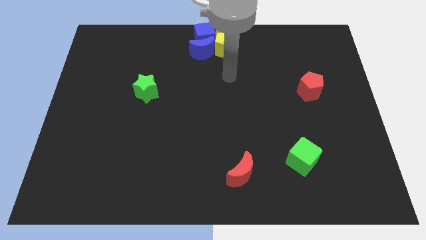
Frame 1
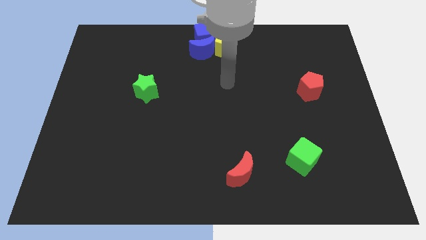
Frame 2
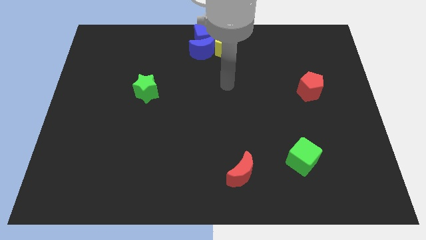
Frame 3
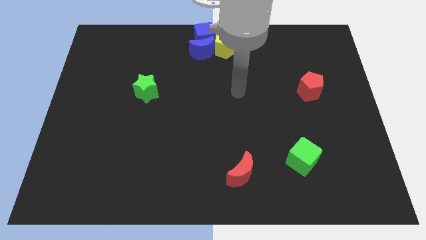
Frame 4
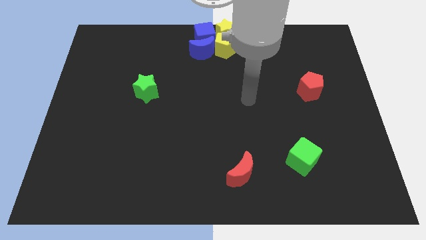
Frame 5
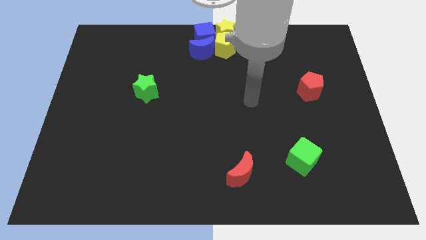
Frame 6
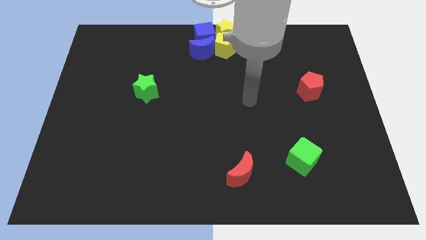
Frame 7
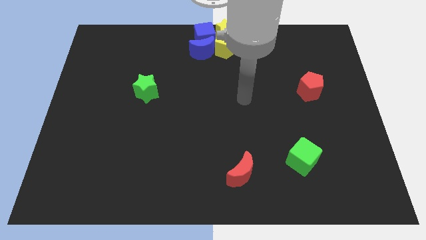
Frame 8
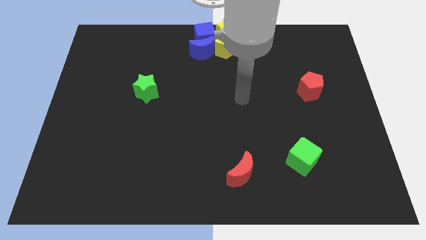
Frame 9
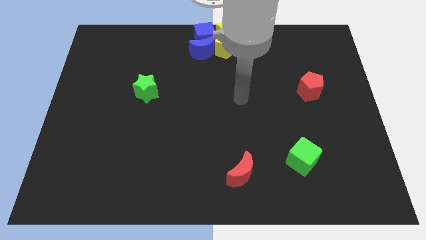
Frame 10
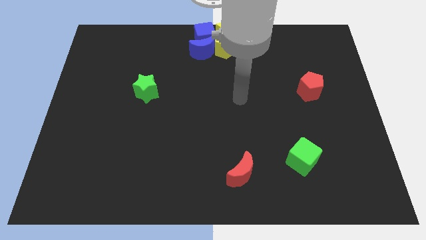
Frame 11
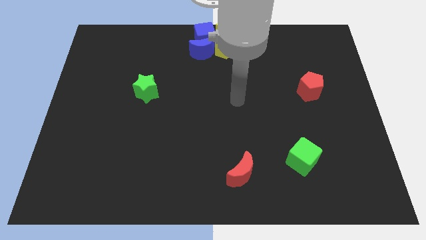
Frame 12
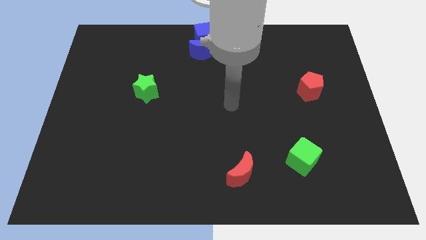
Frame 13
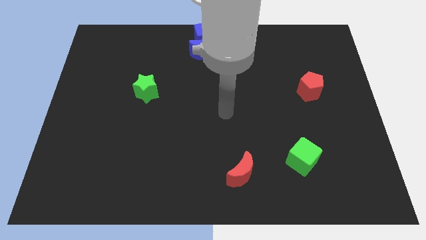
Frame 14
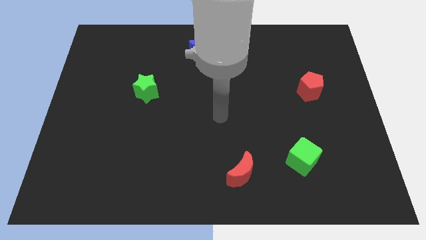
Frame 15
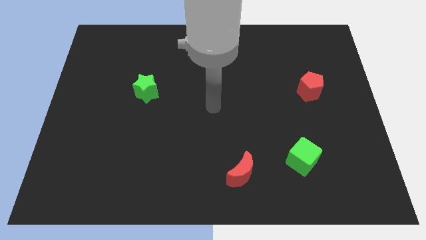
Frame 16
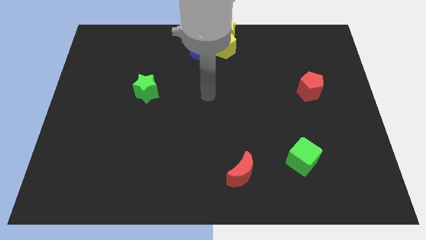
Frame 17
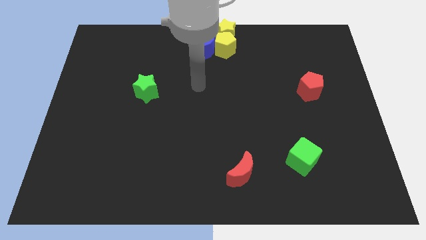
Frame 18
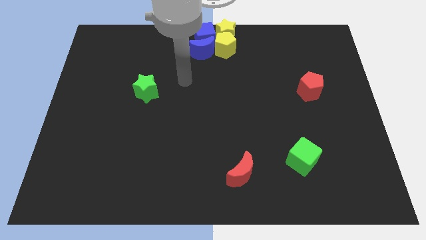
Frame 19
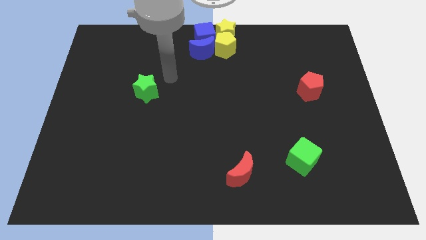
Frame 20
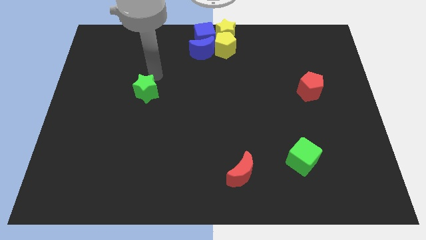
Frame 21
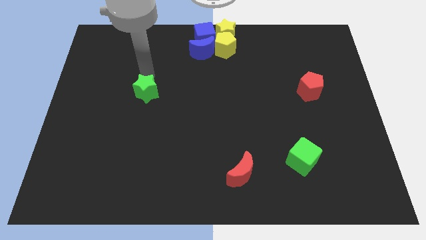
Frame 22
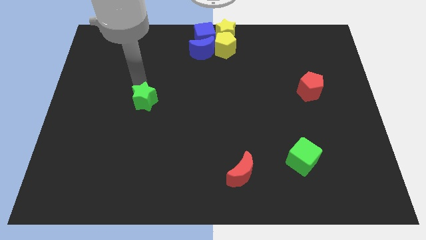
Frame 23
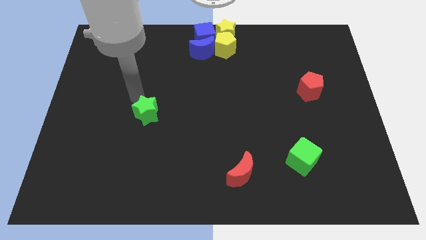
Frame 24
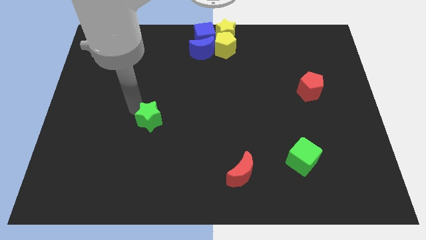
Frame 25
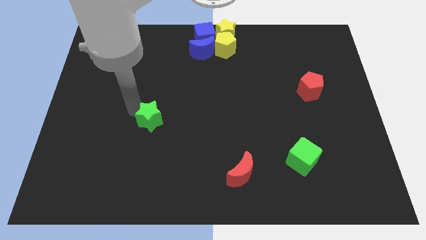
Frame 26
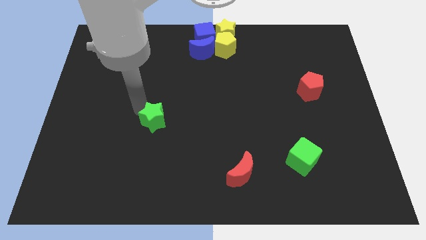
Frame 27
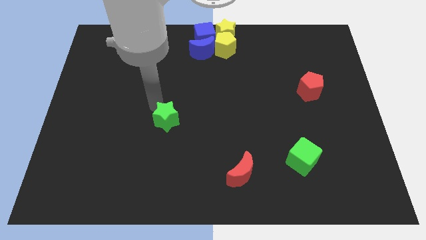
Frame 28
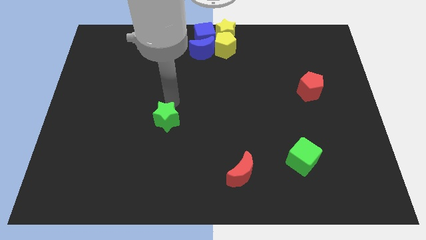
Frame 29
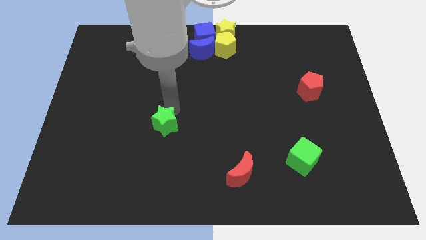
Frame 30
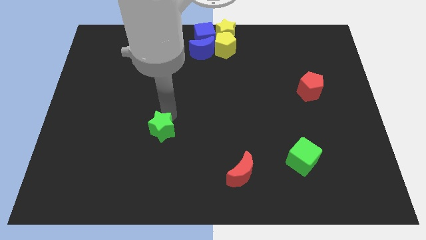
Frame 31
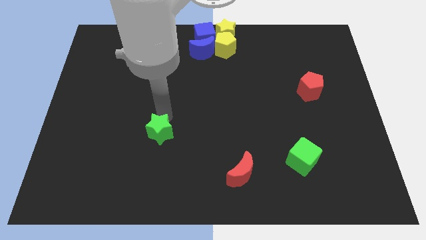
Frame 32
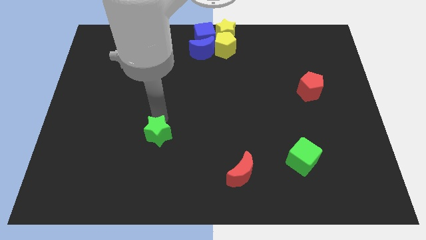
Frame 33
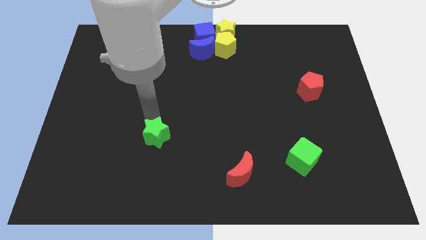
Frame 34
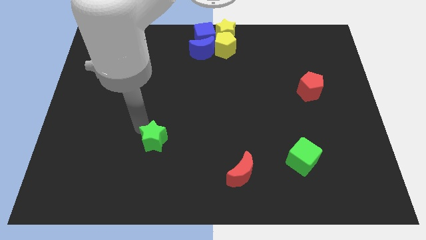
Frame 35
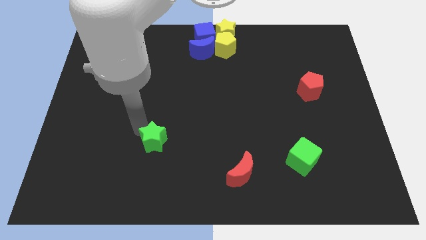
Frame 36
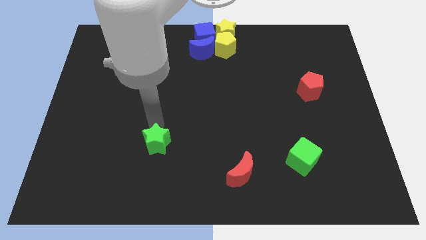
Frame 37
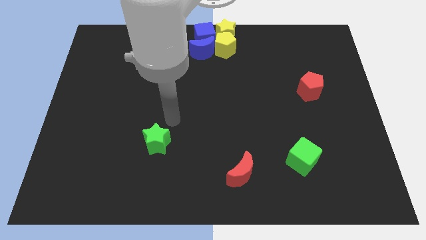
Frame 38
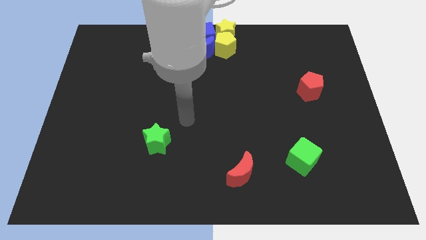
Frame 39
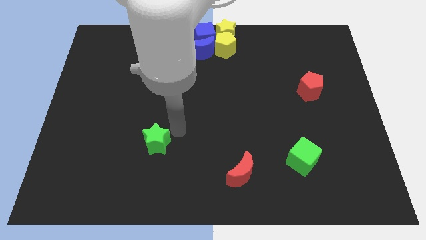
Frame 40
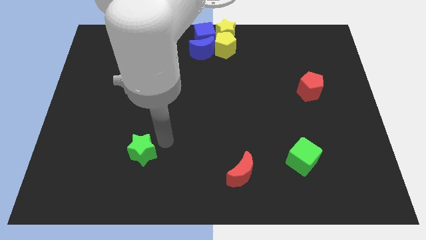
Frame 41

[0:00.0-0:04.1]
place the green star to the left of the red moon

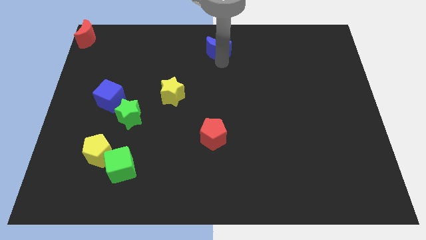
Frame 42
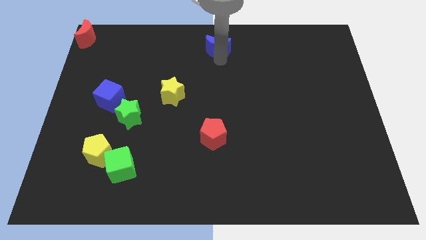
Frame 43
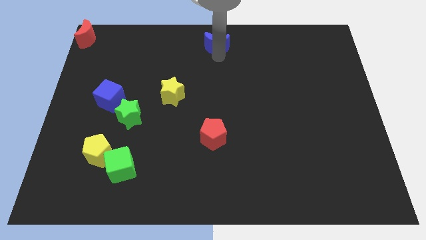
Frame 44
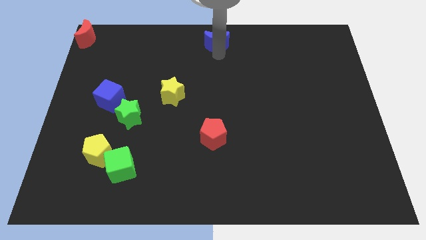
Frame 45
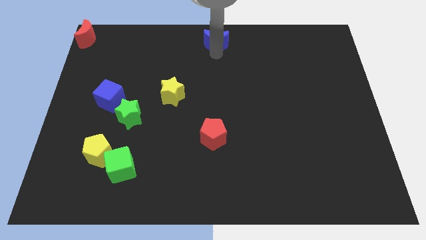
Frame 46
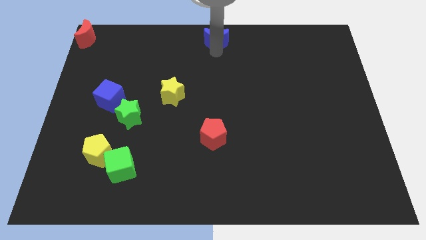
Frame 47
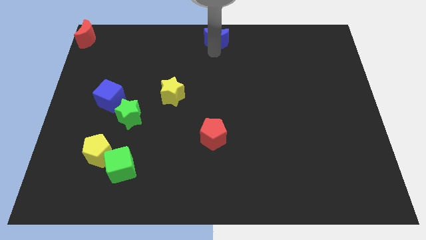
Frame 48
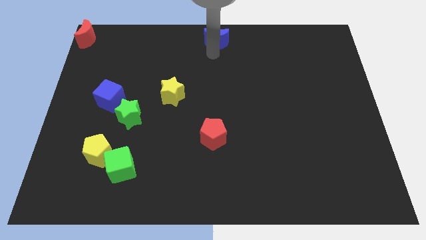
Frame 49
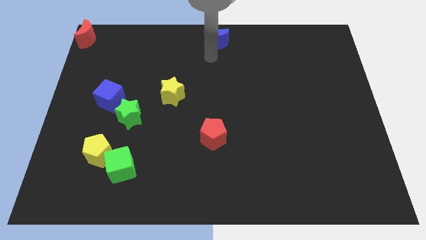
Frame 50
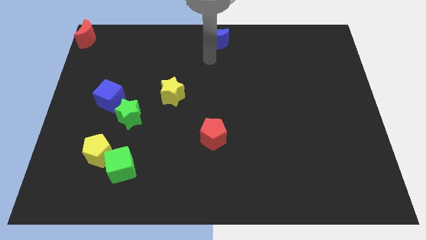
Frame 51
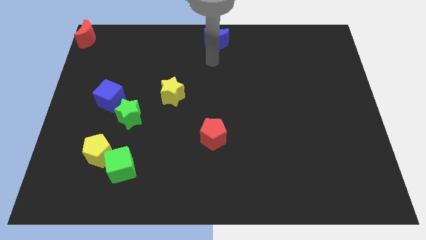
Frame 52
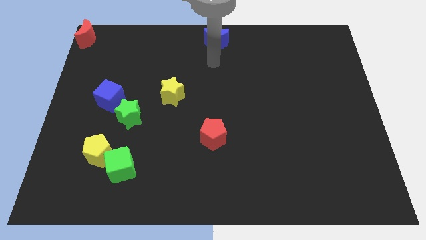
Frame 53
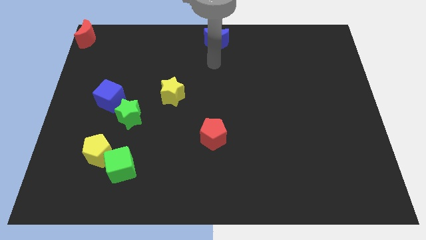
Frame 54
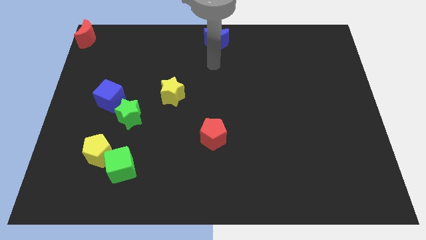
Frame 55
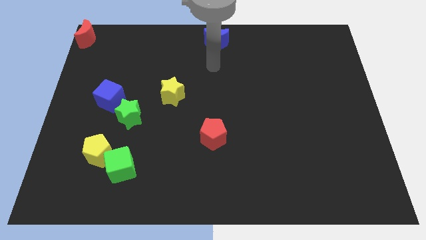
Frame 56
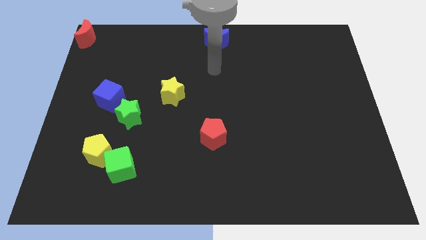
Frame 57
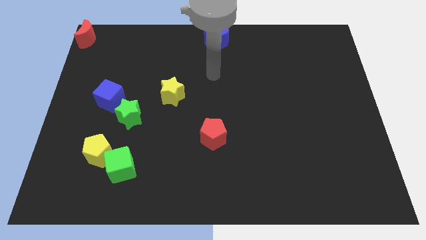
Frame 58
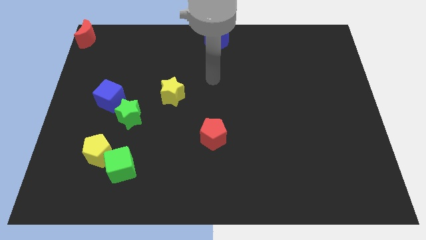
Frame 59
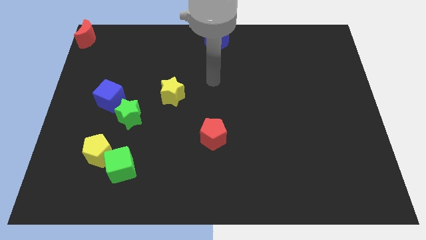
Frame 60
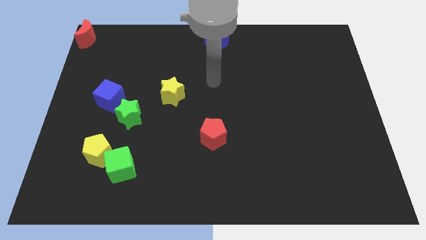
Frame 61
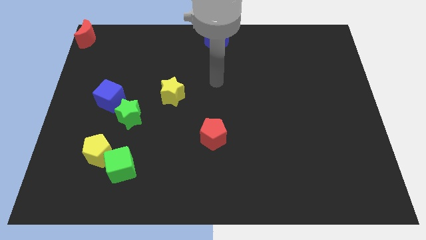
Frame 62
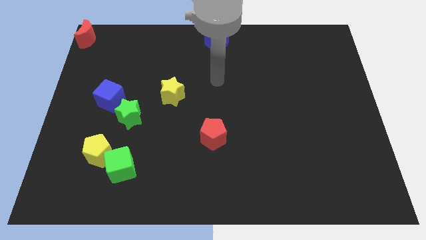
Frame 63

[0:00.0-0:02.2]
move the blue crescent to the top center of the board

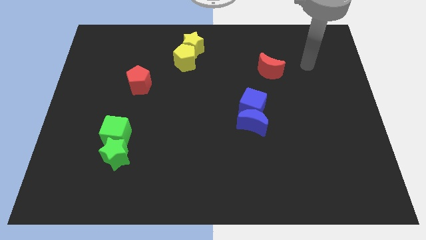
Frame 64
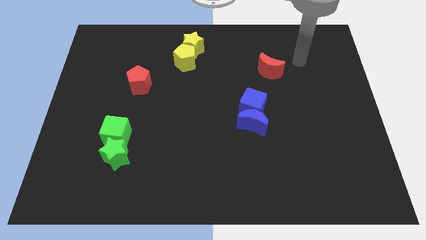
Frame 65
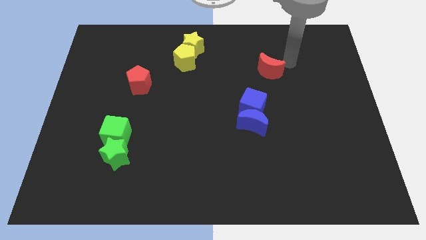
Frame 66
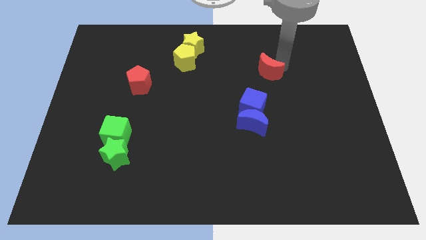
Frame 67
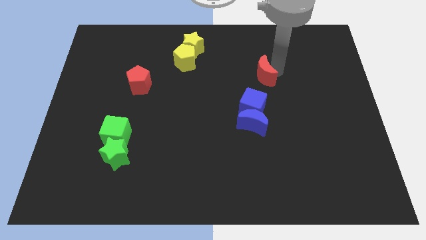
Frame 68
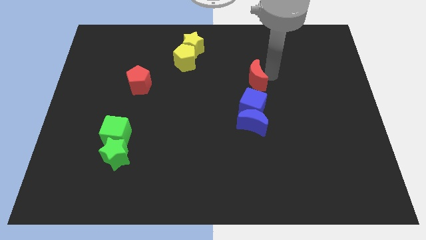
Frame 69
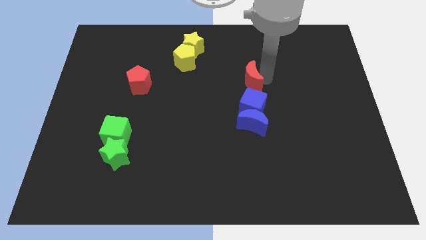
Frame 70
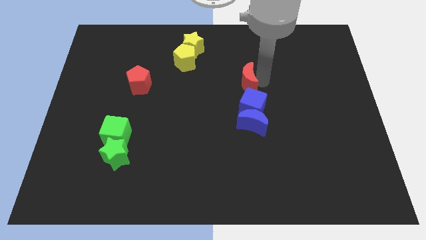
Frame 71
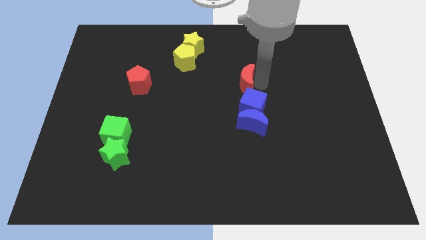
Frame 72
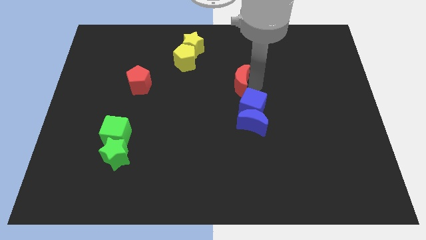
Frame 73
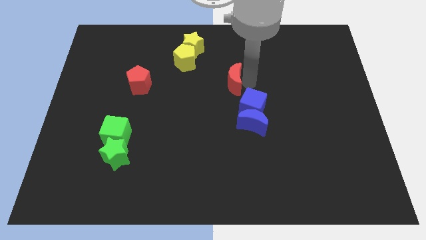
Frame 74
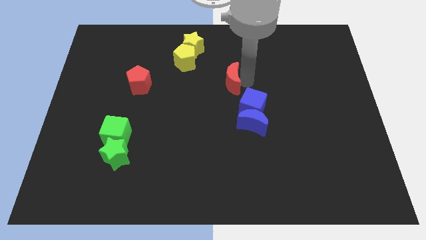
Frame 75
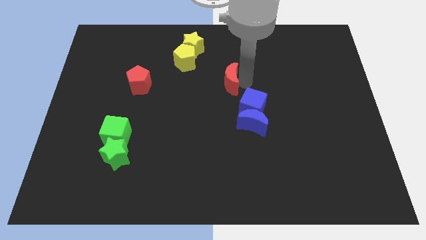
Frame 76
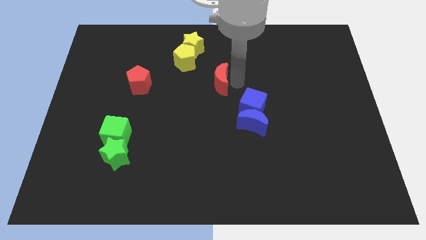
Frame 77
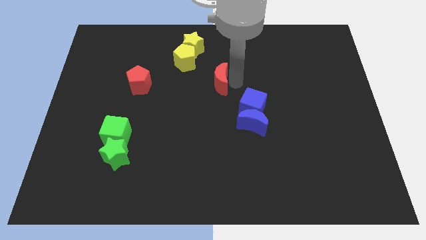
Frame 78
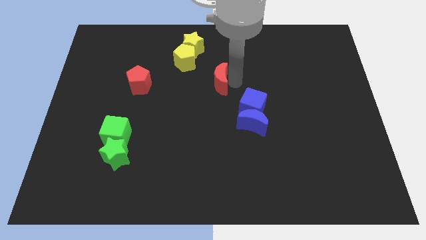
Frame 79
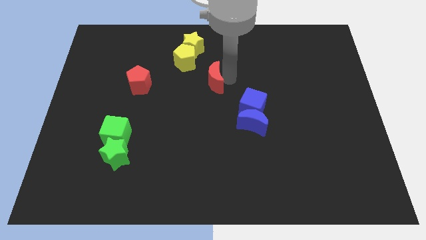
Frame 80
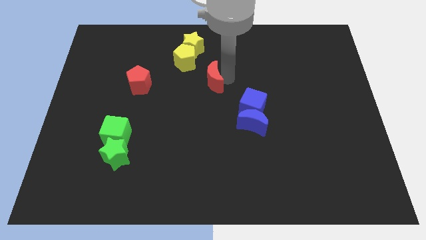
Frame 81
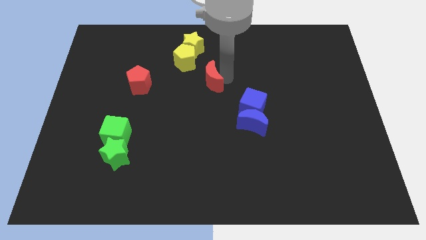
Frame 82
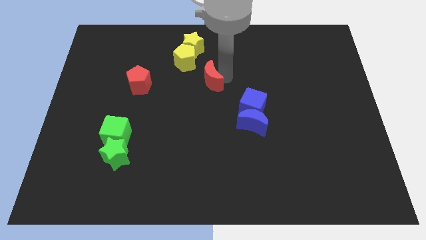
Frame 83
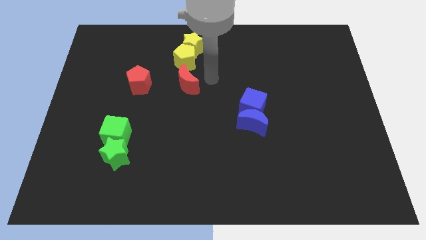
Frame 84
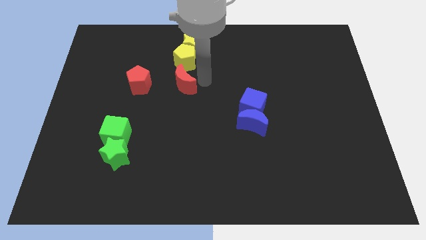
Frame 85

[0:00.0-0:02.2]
move red moon to the bottom of yellow pentagon

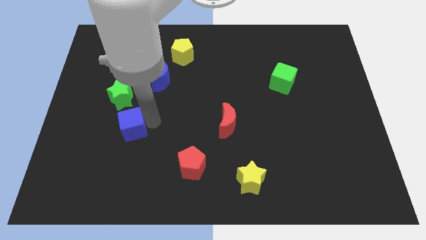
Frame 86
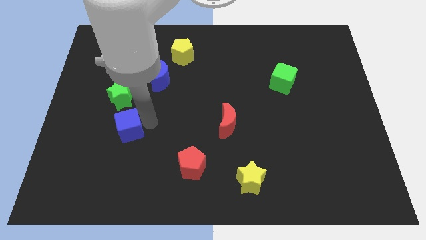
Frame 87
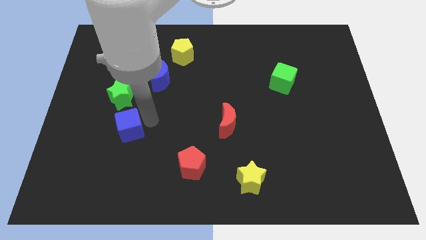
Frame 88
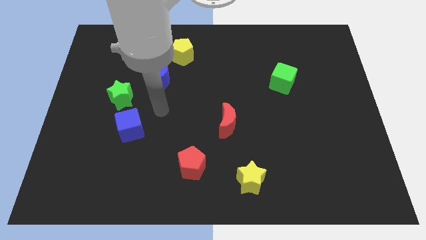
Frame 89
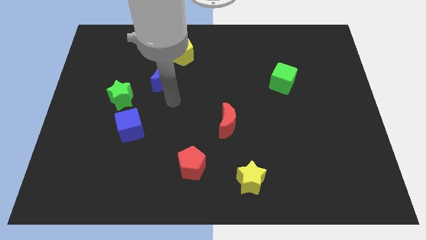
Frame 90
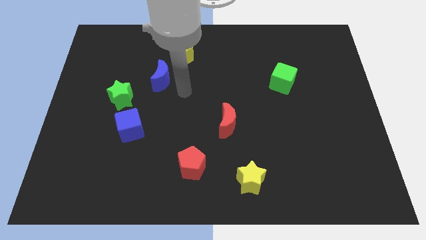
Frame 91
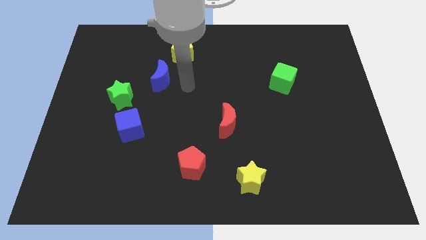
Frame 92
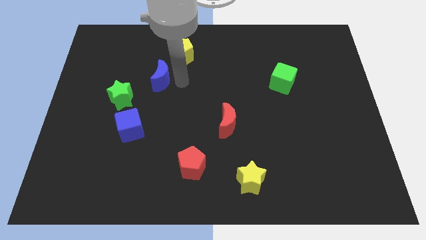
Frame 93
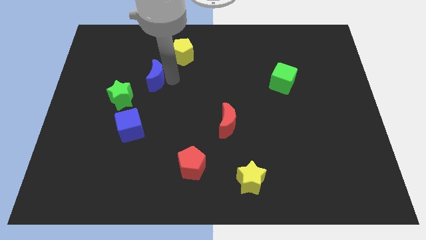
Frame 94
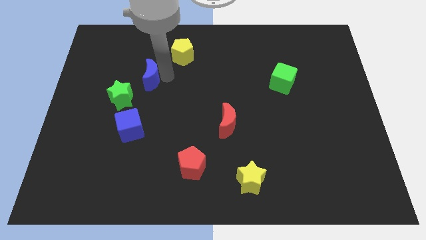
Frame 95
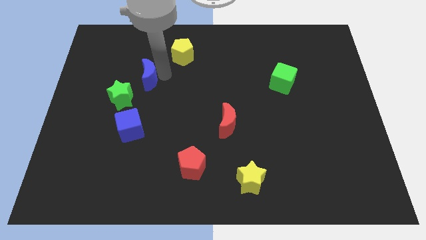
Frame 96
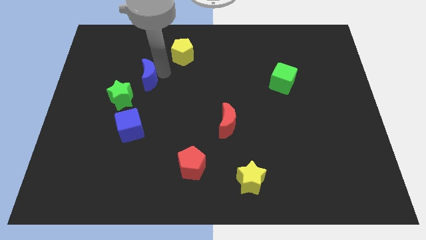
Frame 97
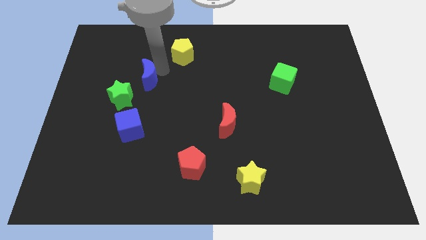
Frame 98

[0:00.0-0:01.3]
push the blue moon to the top right side of the green star
